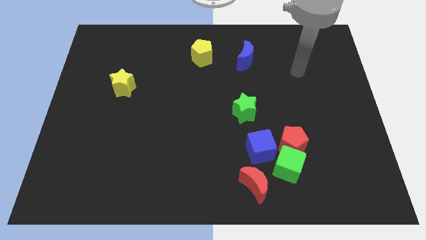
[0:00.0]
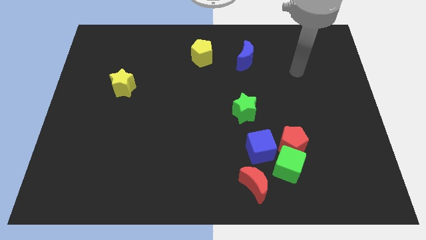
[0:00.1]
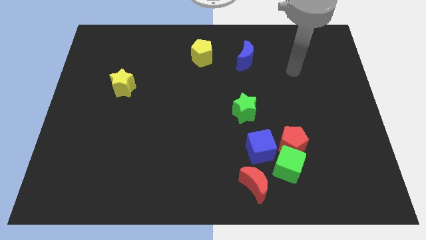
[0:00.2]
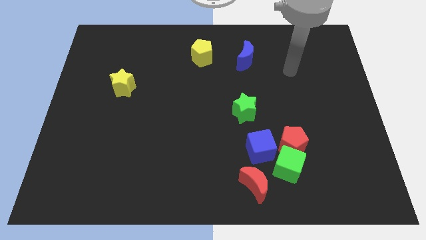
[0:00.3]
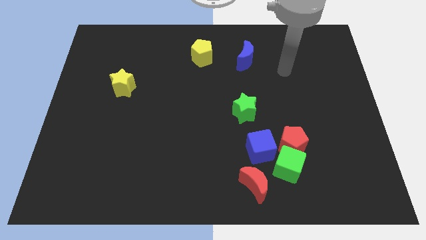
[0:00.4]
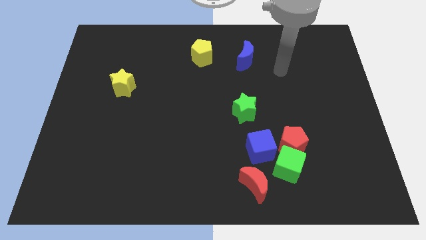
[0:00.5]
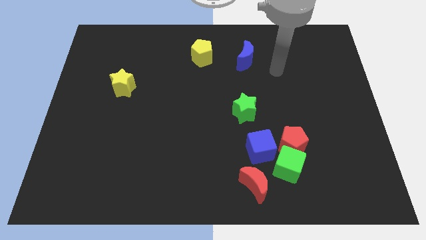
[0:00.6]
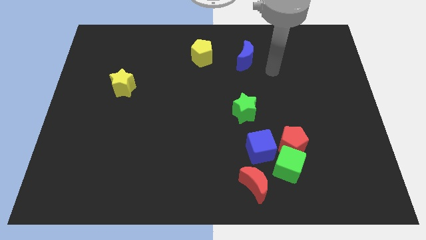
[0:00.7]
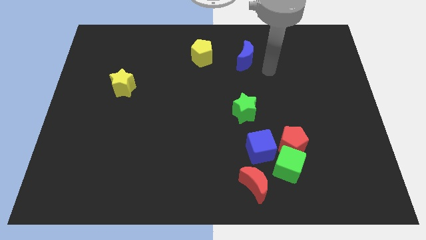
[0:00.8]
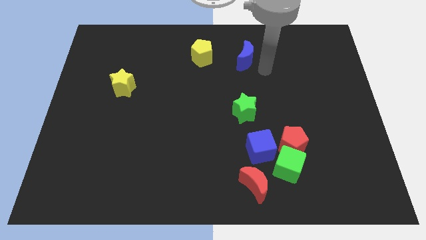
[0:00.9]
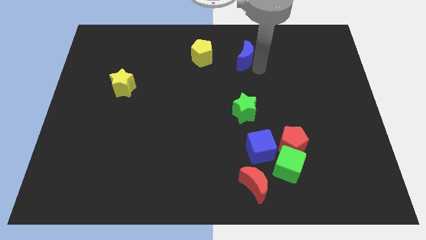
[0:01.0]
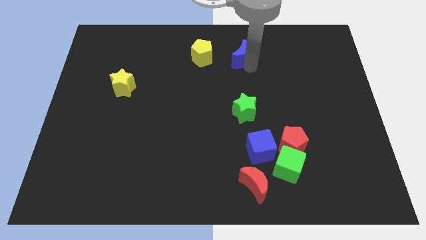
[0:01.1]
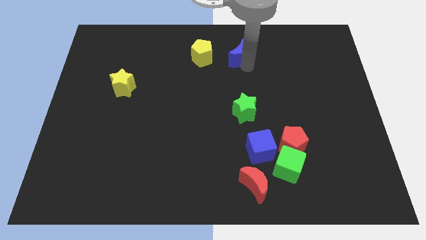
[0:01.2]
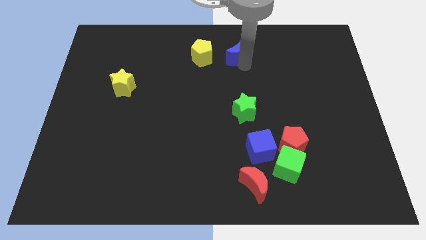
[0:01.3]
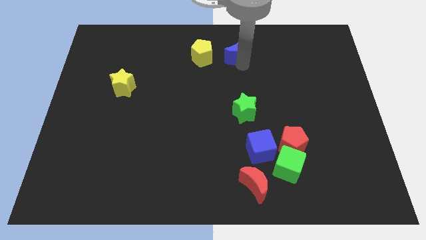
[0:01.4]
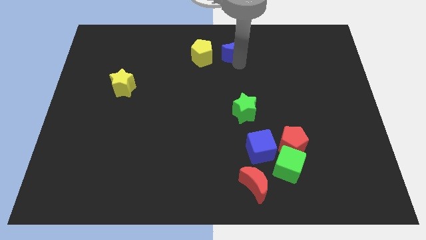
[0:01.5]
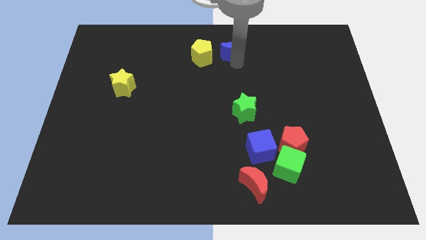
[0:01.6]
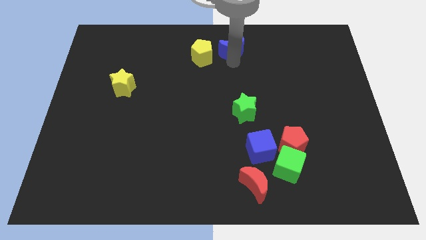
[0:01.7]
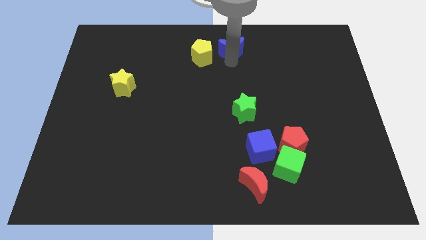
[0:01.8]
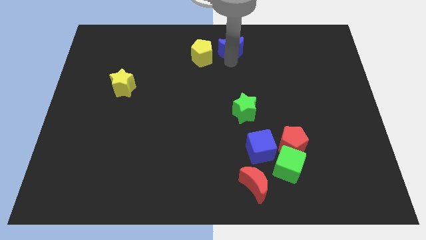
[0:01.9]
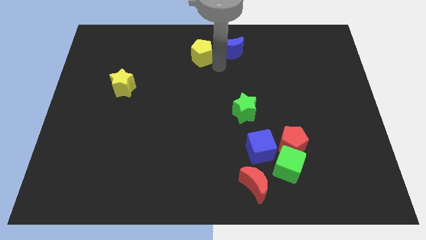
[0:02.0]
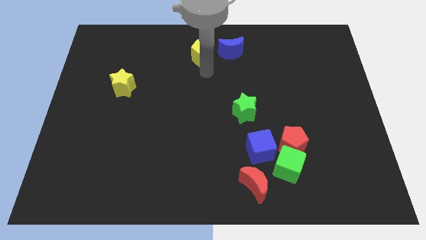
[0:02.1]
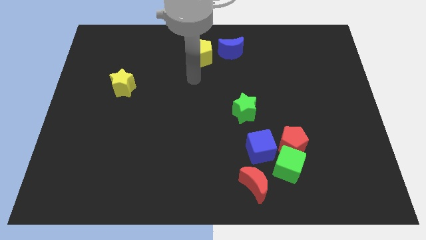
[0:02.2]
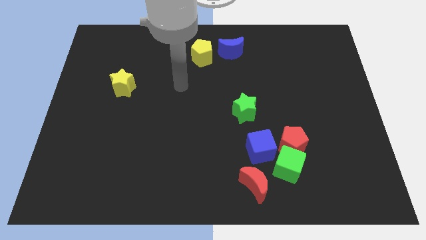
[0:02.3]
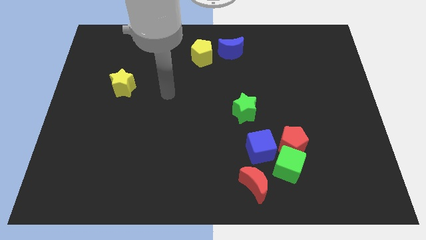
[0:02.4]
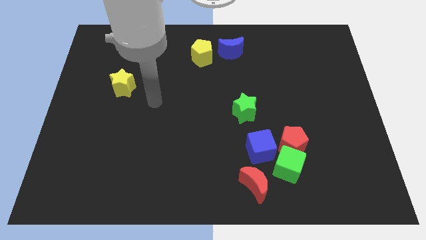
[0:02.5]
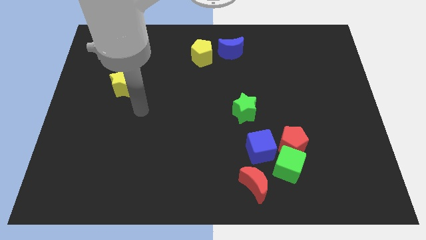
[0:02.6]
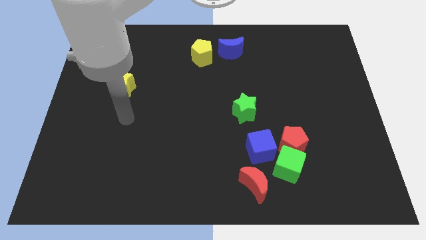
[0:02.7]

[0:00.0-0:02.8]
move the blue moon slightly up

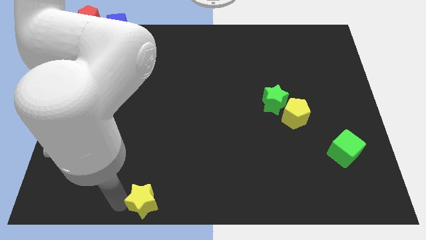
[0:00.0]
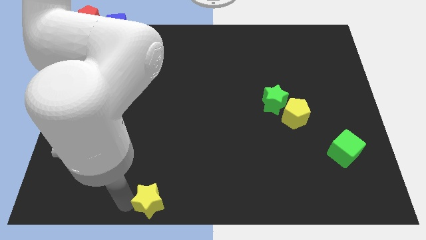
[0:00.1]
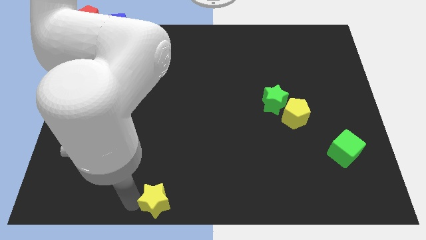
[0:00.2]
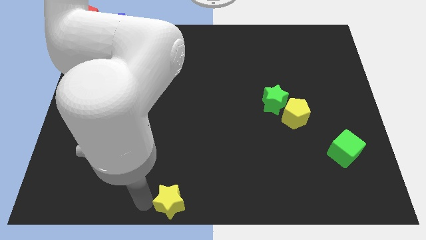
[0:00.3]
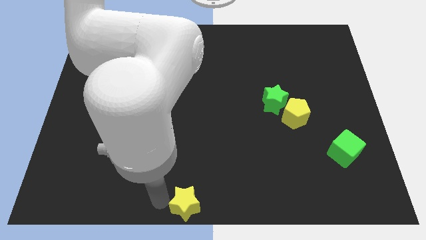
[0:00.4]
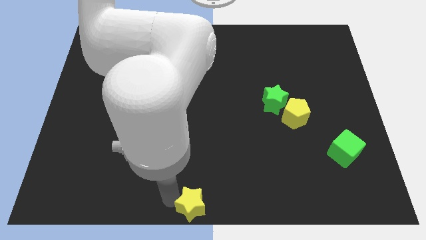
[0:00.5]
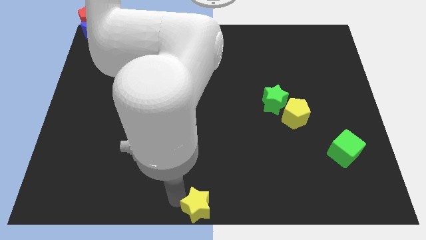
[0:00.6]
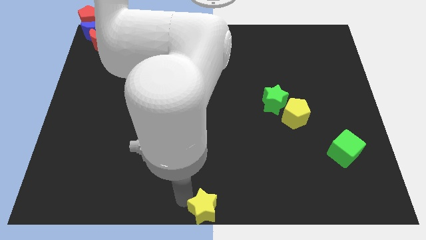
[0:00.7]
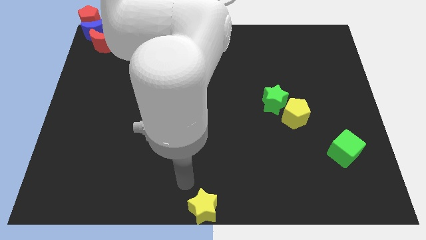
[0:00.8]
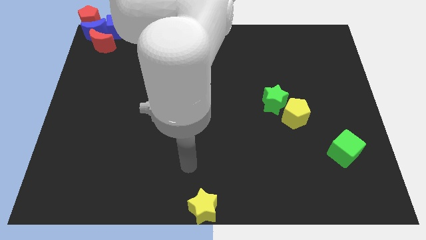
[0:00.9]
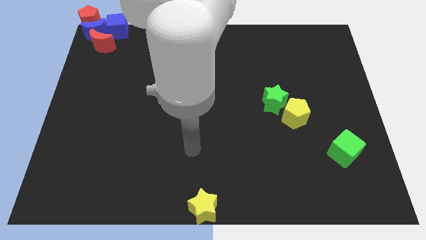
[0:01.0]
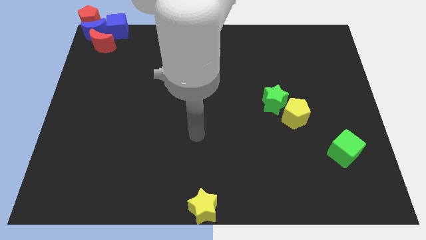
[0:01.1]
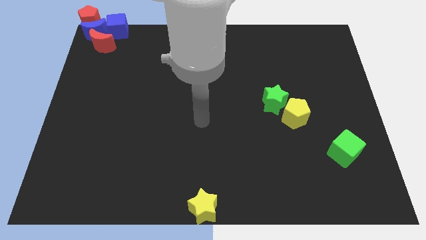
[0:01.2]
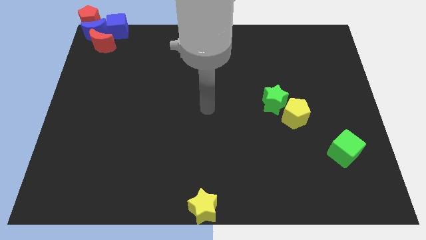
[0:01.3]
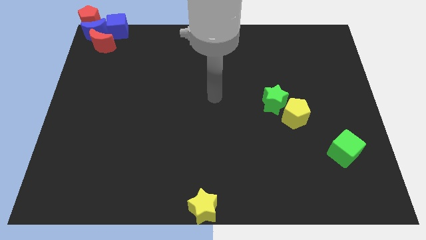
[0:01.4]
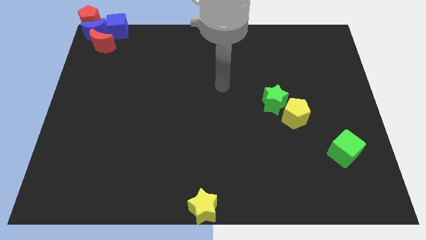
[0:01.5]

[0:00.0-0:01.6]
place the yellow star at the bottom center of the board

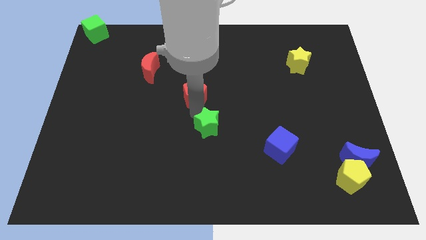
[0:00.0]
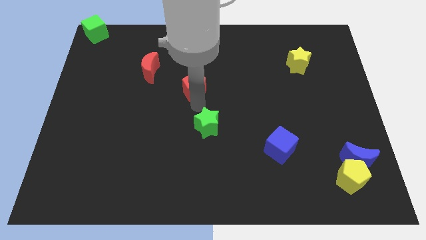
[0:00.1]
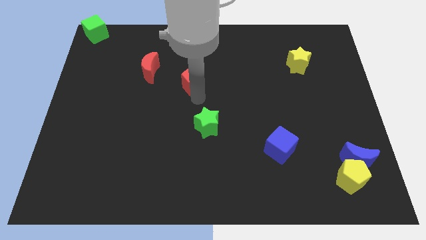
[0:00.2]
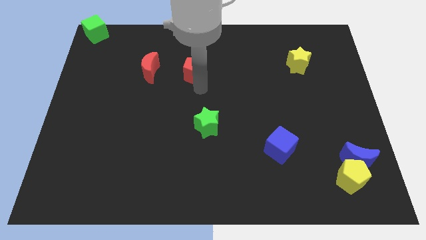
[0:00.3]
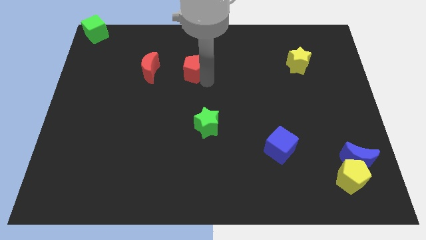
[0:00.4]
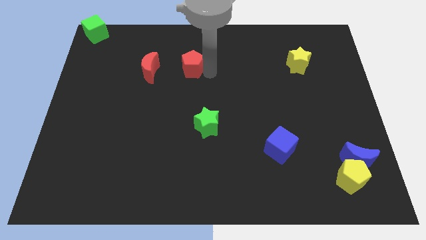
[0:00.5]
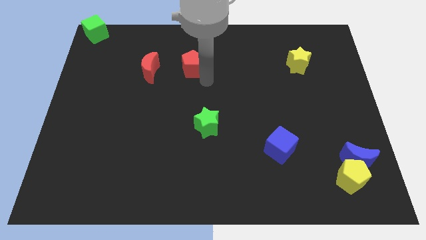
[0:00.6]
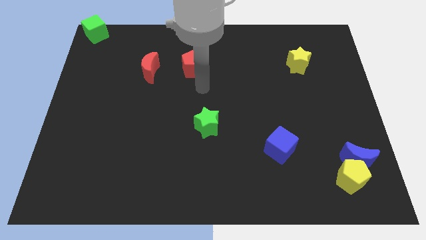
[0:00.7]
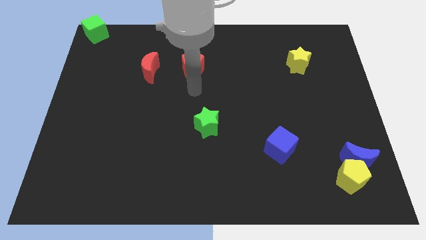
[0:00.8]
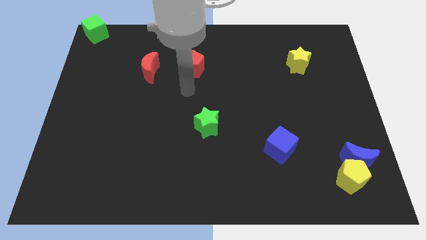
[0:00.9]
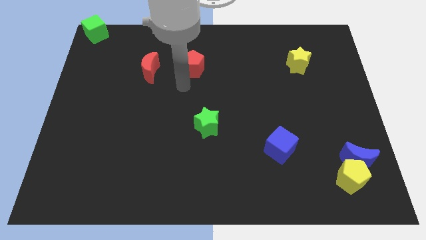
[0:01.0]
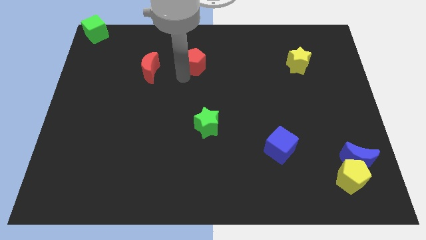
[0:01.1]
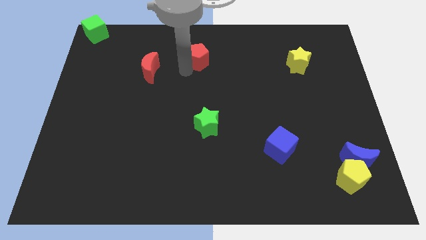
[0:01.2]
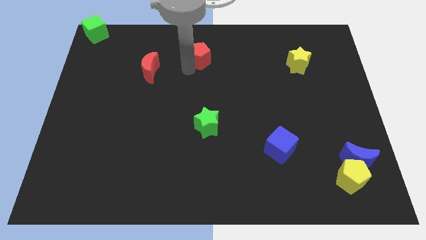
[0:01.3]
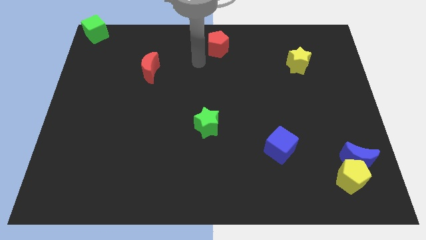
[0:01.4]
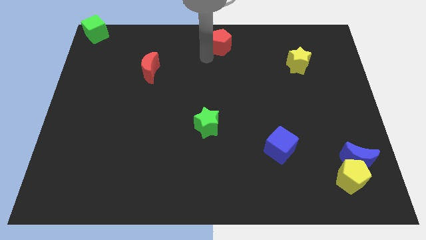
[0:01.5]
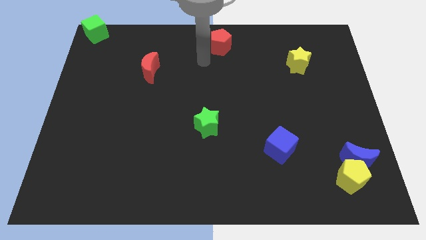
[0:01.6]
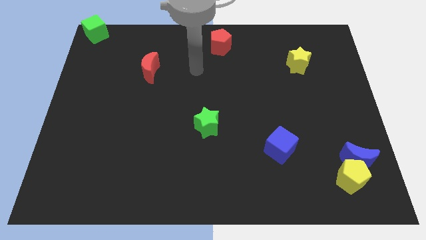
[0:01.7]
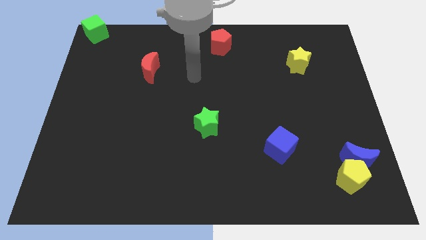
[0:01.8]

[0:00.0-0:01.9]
move the red pentagon towards the top center of the board

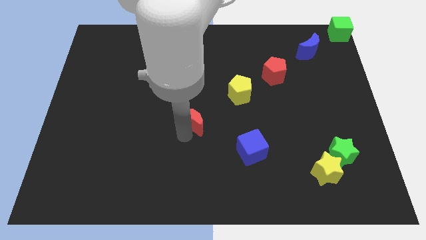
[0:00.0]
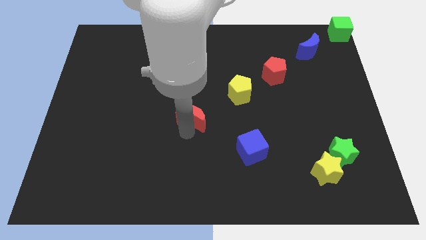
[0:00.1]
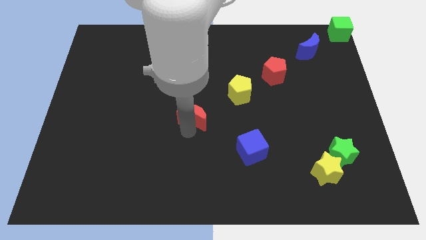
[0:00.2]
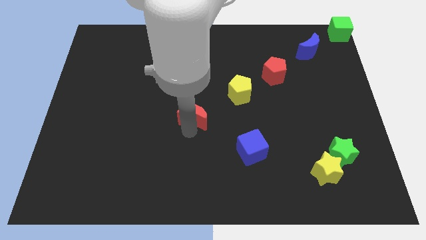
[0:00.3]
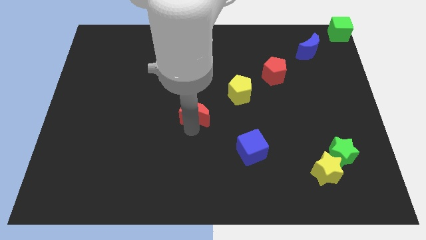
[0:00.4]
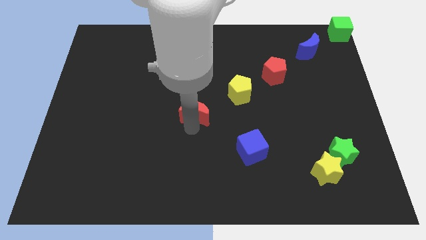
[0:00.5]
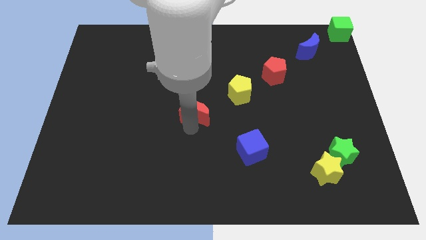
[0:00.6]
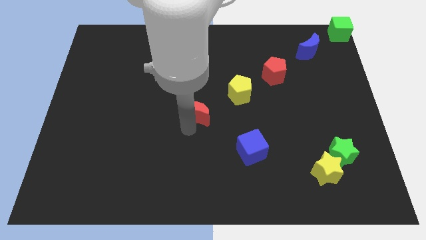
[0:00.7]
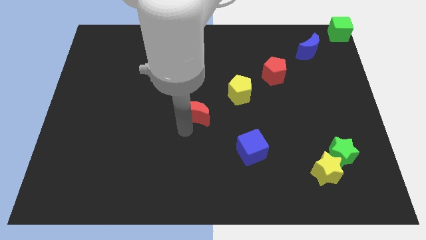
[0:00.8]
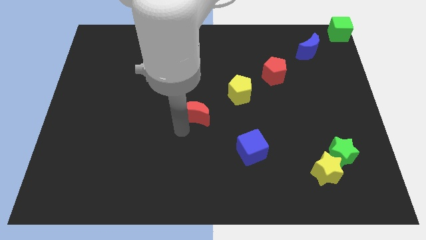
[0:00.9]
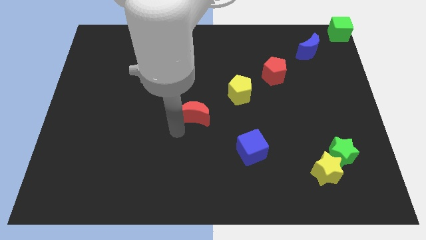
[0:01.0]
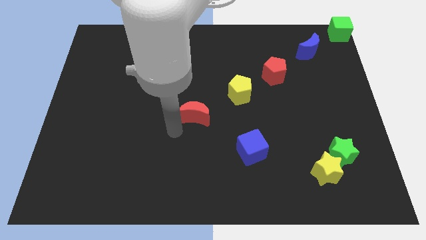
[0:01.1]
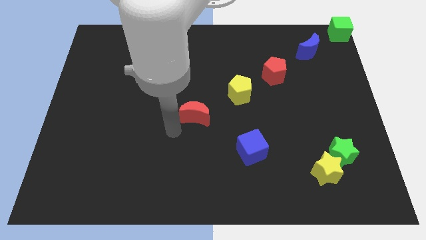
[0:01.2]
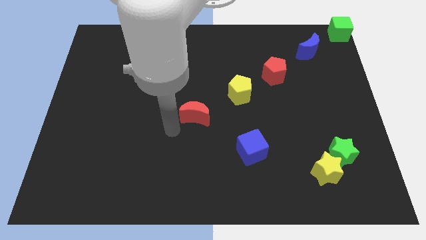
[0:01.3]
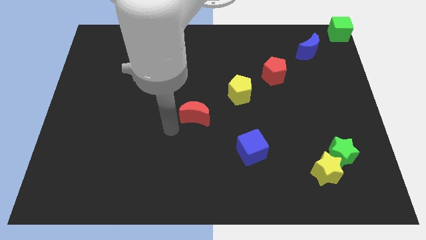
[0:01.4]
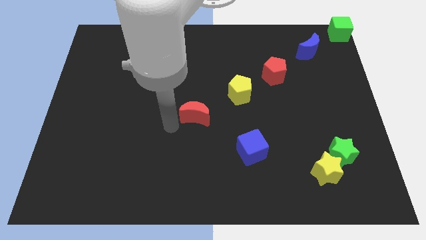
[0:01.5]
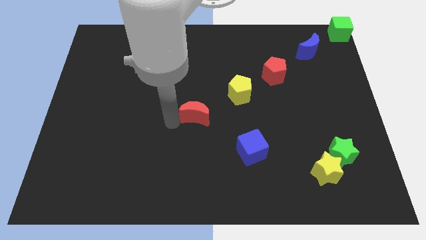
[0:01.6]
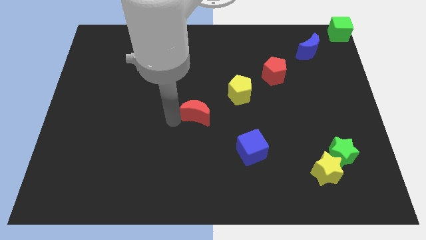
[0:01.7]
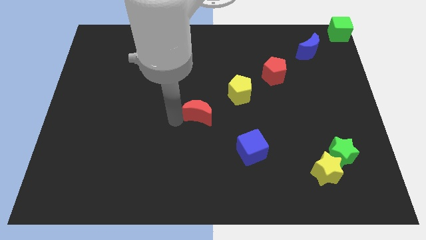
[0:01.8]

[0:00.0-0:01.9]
place the red moon diagonal to the blue cube

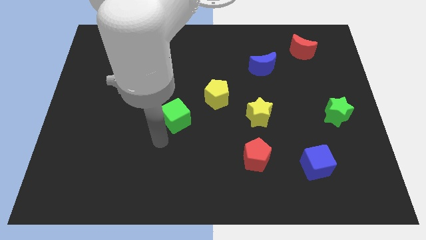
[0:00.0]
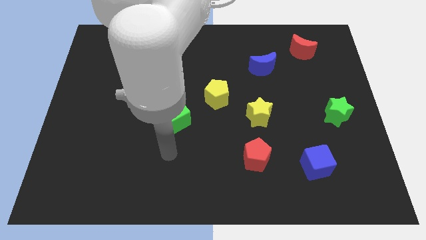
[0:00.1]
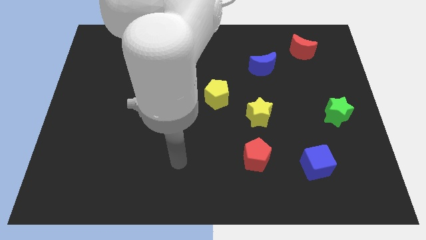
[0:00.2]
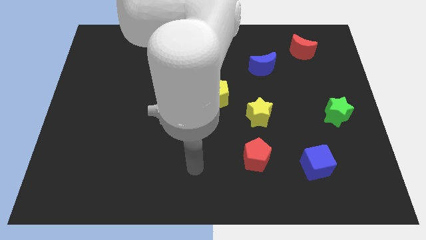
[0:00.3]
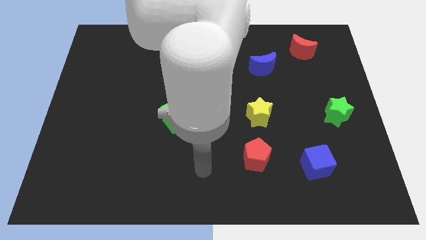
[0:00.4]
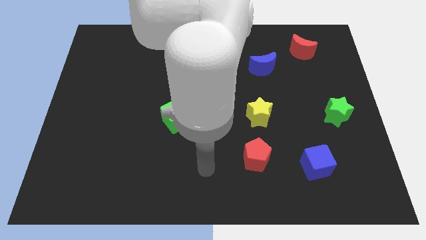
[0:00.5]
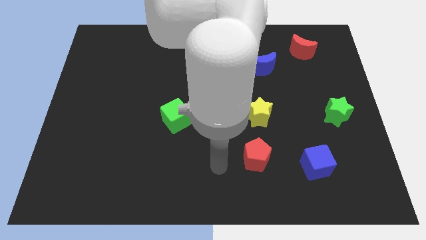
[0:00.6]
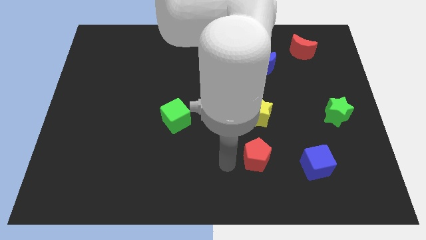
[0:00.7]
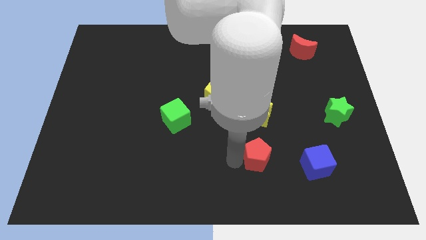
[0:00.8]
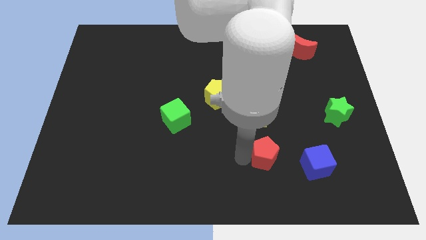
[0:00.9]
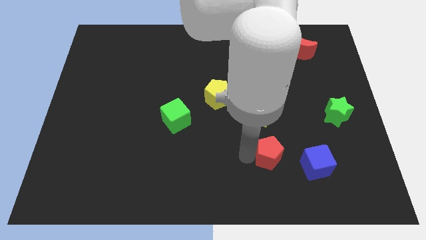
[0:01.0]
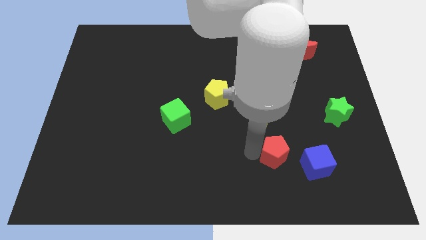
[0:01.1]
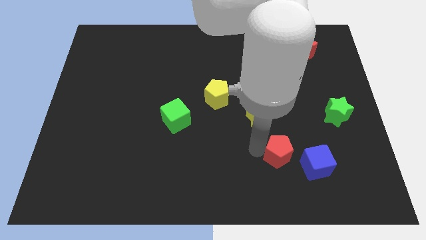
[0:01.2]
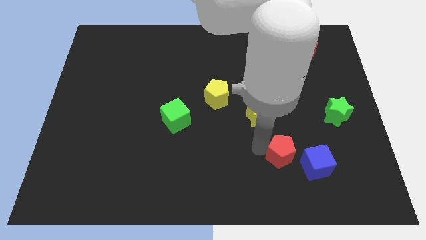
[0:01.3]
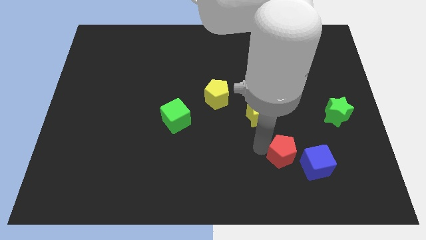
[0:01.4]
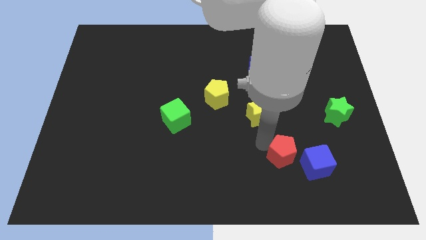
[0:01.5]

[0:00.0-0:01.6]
move the red pentagon slightly to the right
